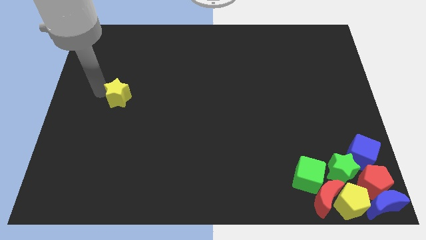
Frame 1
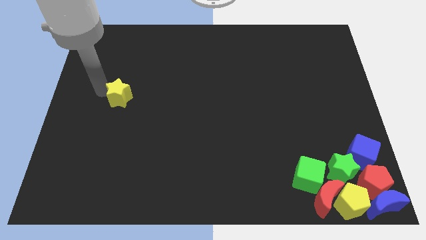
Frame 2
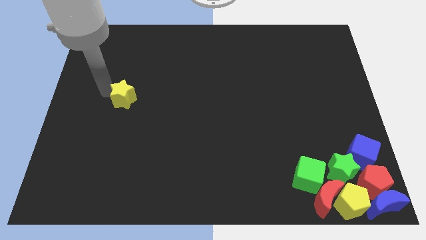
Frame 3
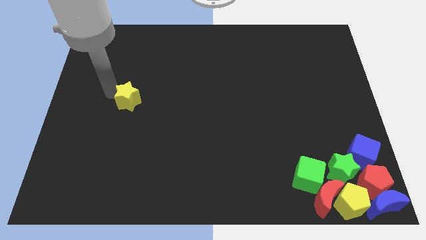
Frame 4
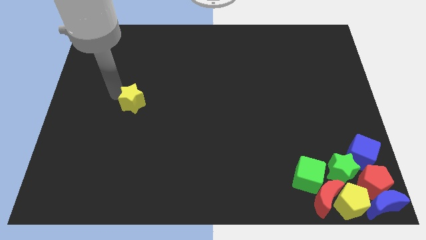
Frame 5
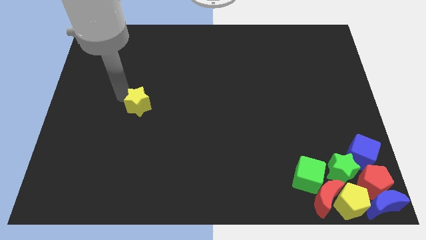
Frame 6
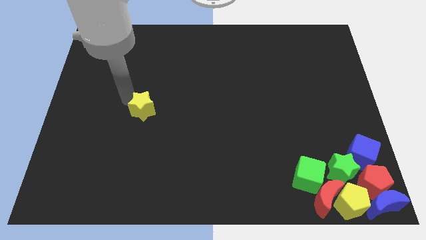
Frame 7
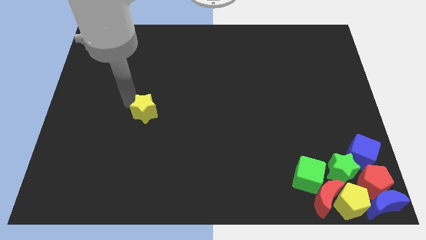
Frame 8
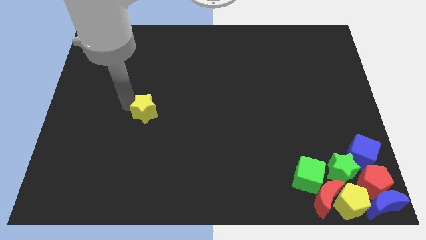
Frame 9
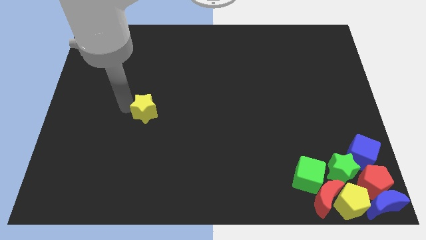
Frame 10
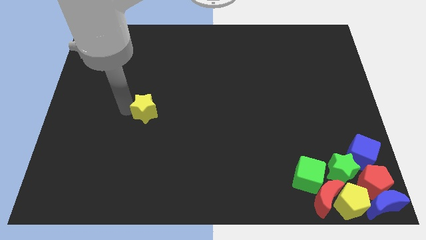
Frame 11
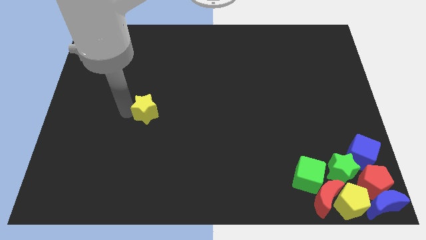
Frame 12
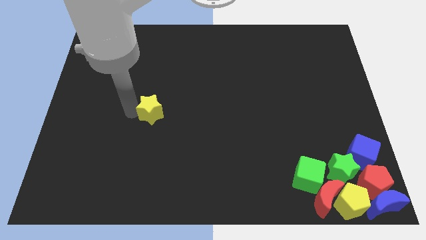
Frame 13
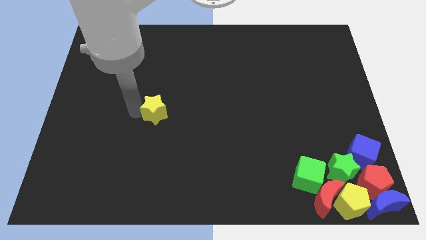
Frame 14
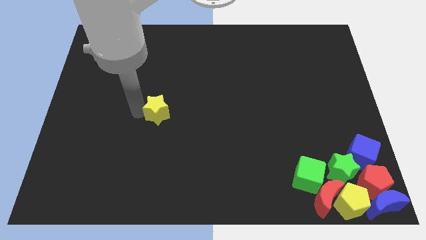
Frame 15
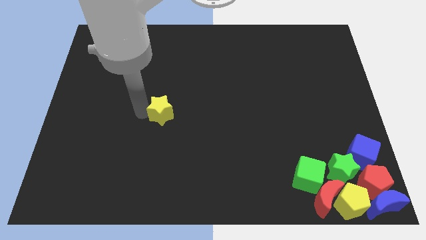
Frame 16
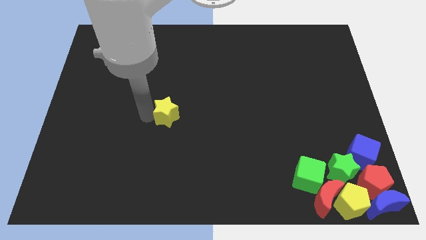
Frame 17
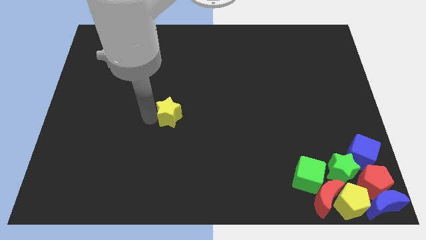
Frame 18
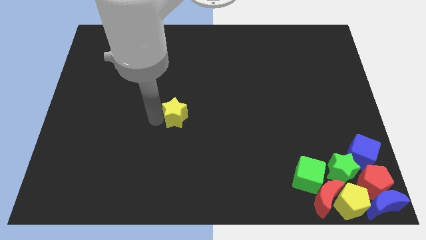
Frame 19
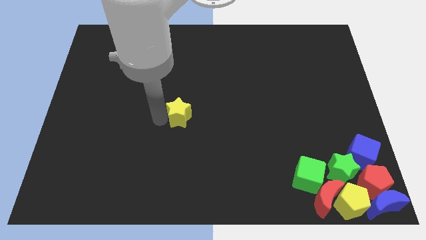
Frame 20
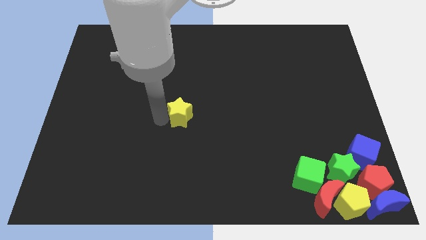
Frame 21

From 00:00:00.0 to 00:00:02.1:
push the yellow star towards the center of the board

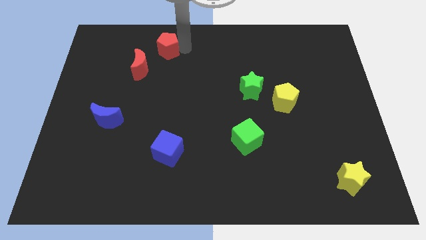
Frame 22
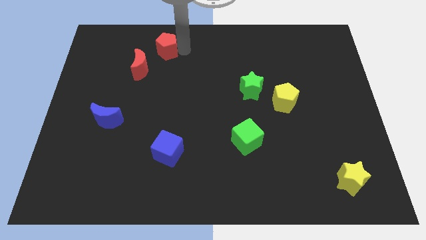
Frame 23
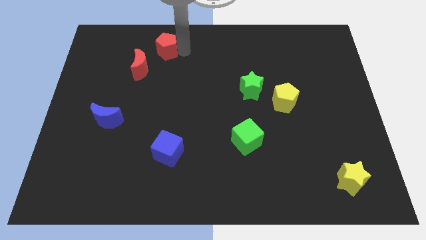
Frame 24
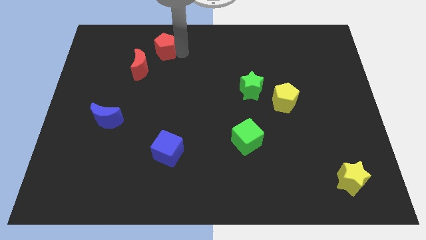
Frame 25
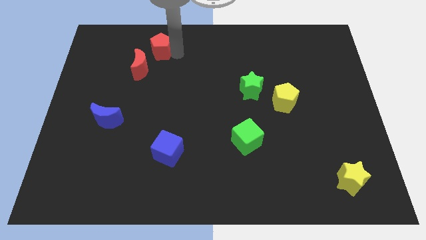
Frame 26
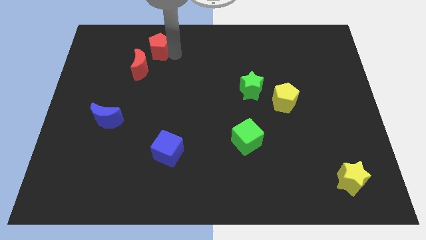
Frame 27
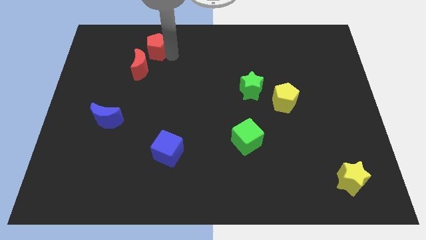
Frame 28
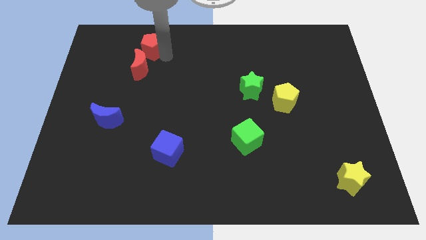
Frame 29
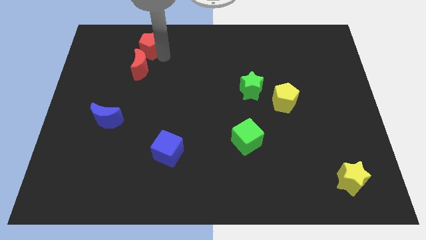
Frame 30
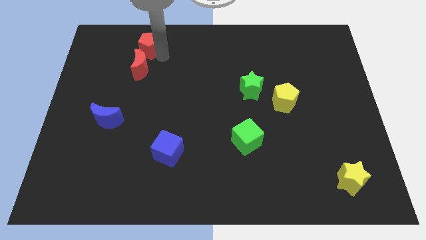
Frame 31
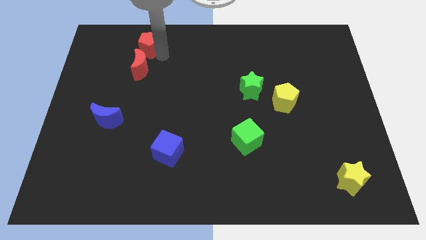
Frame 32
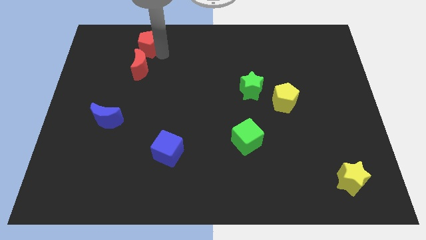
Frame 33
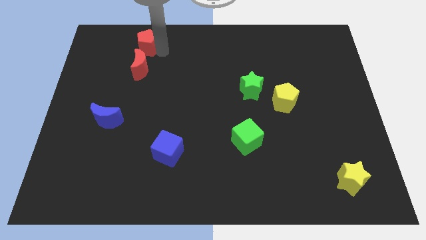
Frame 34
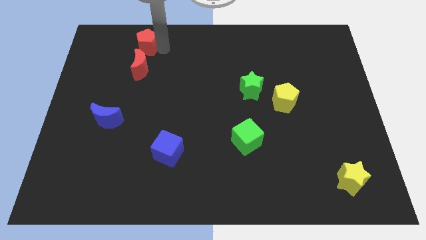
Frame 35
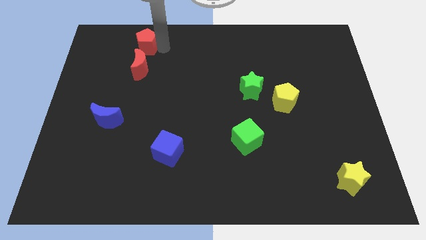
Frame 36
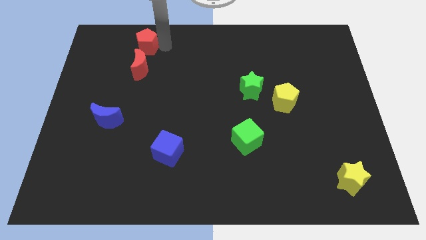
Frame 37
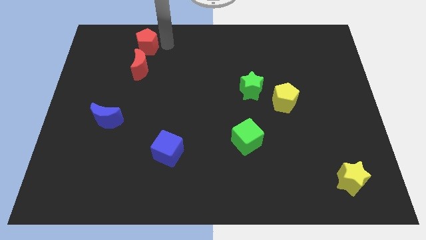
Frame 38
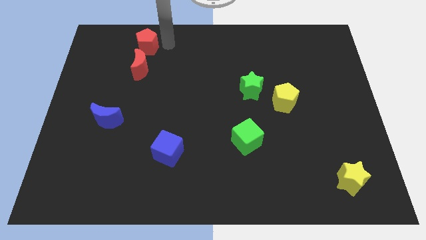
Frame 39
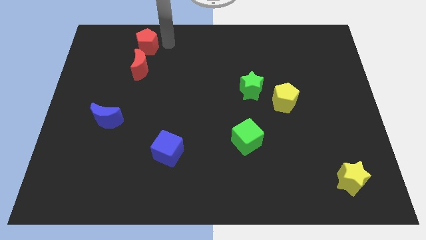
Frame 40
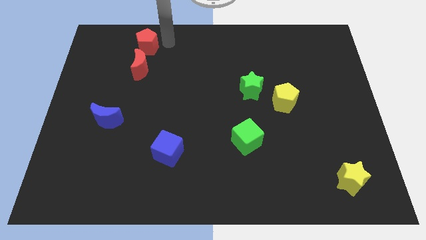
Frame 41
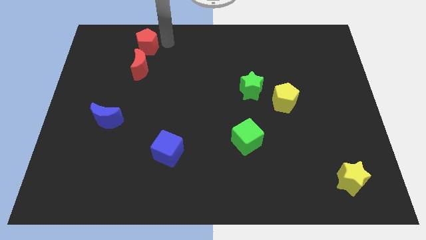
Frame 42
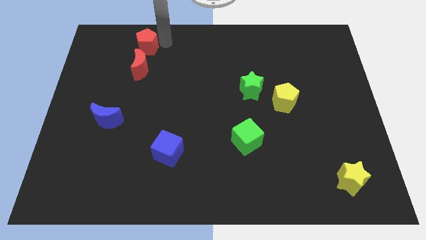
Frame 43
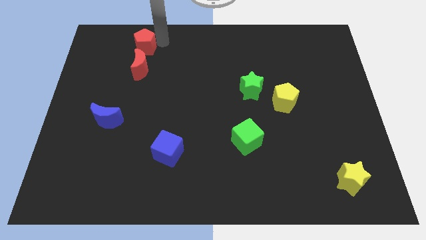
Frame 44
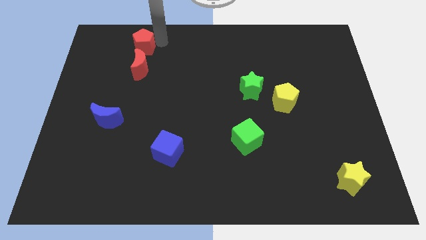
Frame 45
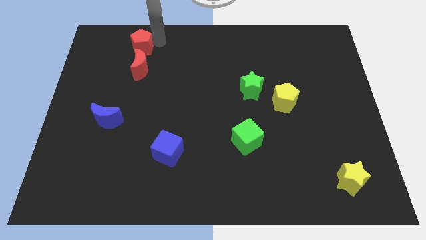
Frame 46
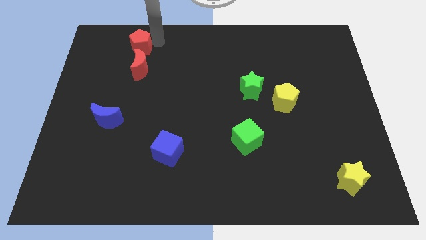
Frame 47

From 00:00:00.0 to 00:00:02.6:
place pentagon above red moon

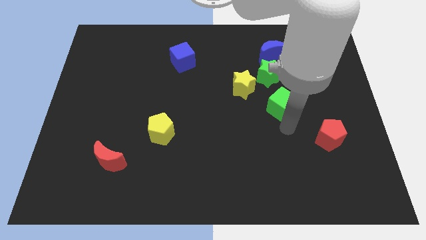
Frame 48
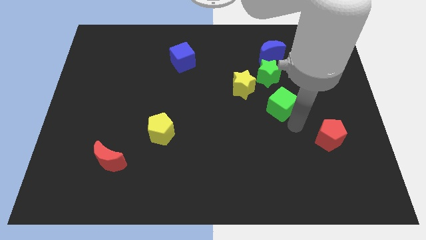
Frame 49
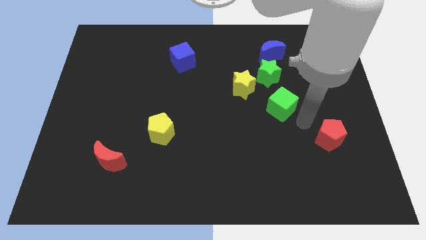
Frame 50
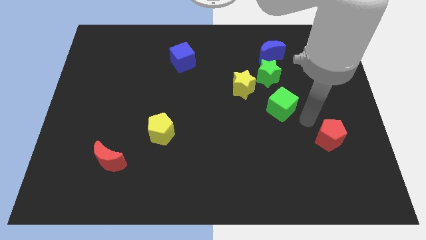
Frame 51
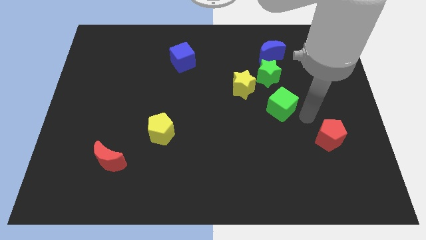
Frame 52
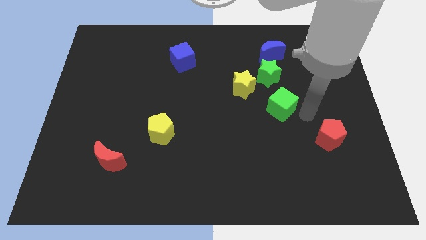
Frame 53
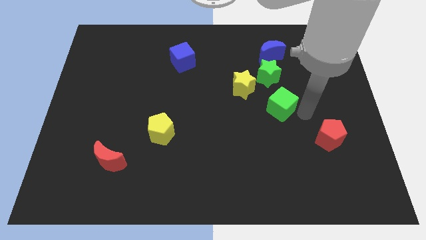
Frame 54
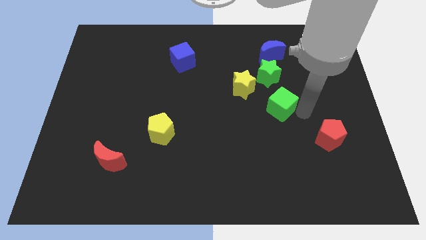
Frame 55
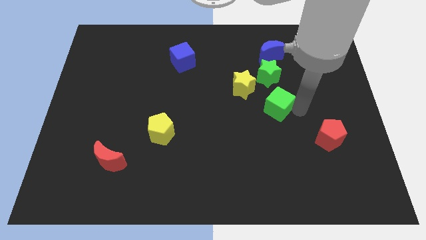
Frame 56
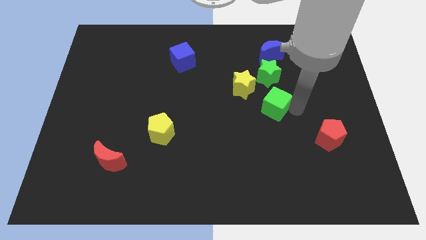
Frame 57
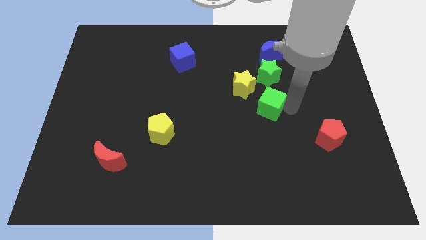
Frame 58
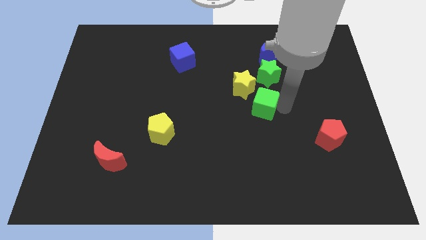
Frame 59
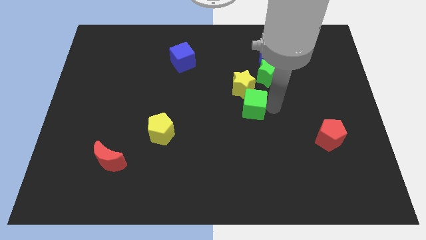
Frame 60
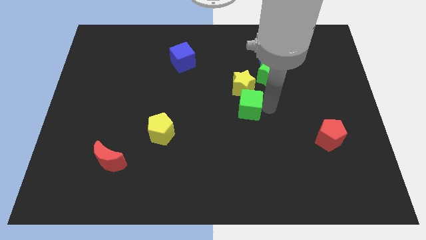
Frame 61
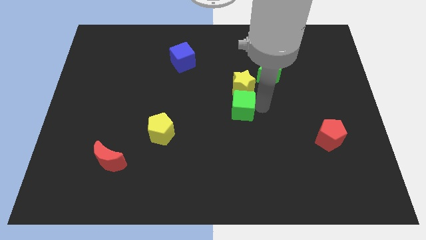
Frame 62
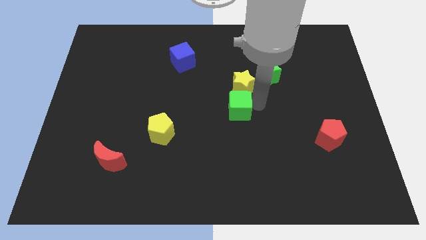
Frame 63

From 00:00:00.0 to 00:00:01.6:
place green cube to the bottom of yellow star

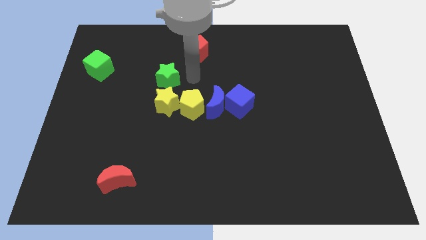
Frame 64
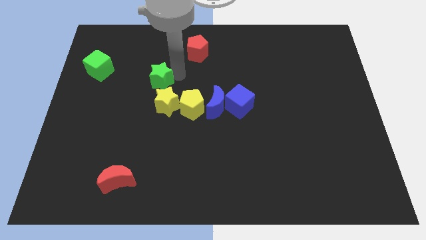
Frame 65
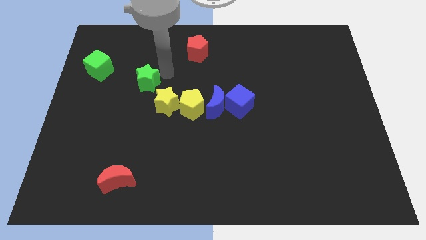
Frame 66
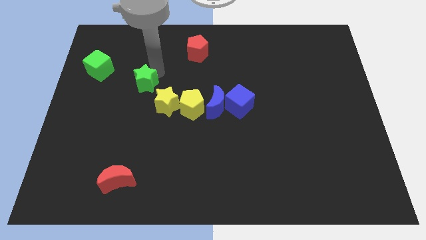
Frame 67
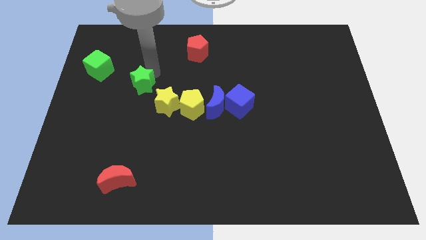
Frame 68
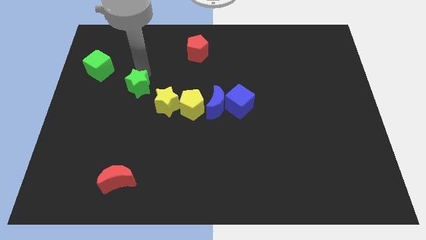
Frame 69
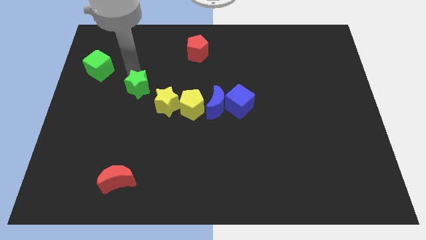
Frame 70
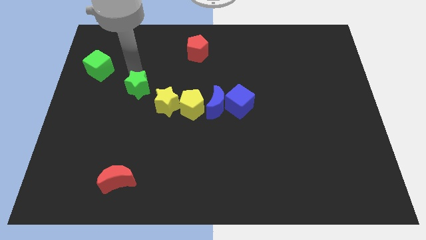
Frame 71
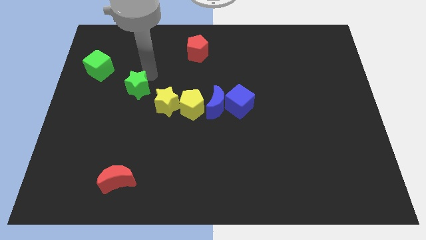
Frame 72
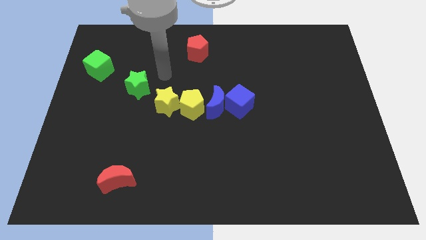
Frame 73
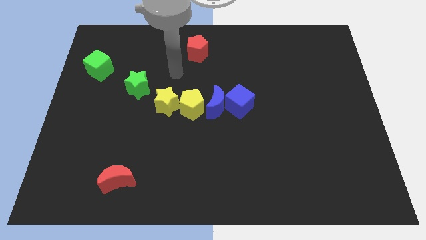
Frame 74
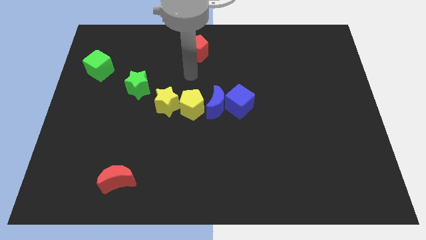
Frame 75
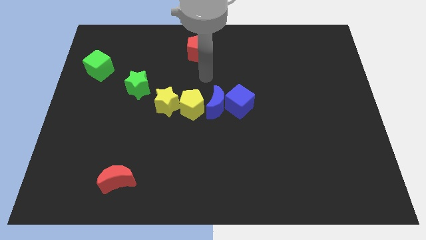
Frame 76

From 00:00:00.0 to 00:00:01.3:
push the green star to the top left of the yellow star

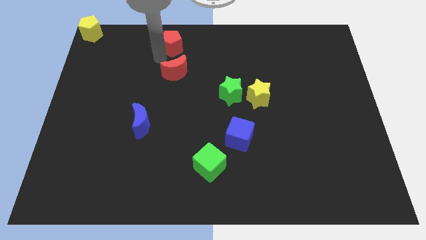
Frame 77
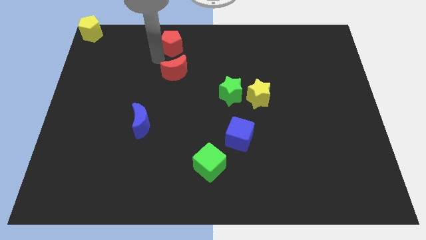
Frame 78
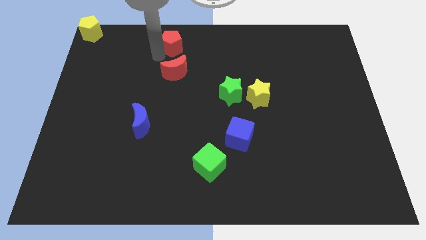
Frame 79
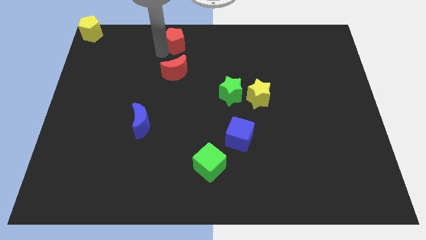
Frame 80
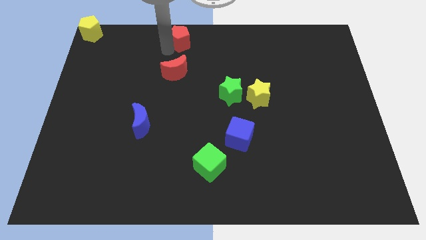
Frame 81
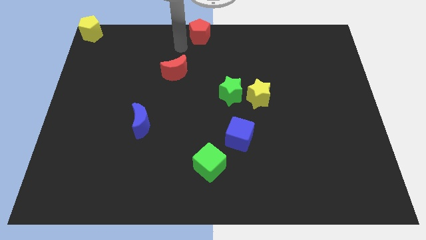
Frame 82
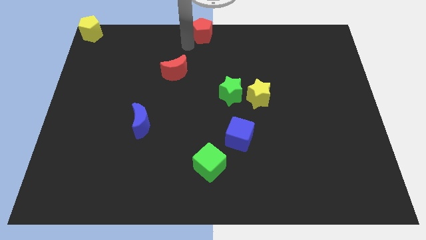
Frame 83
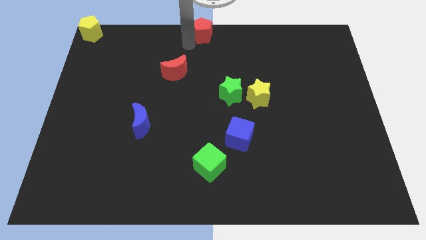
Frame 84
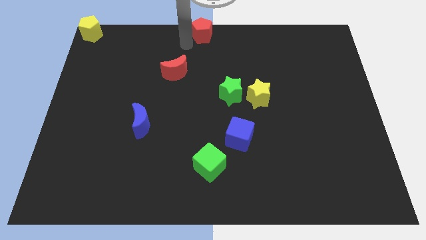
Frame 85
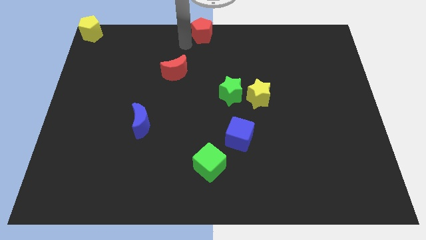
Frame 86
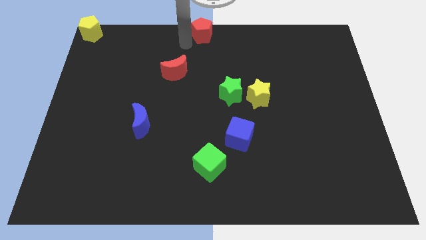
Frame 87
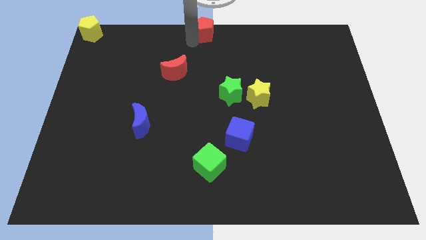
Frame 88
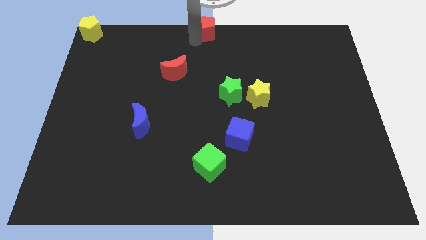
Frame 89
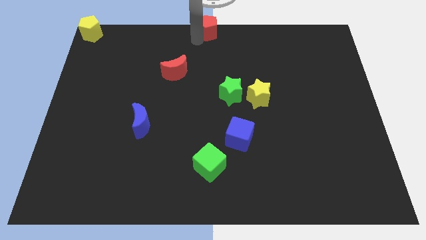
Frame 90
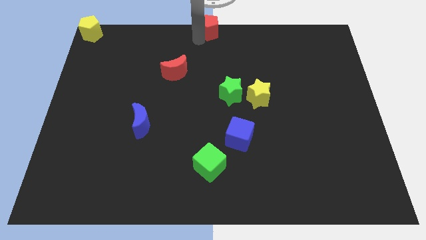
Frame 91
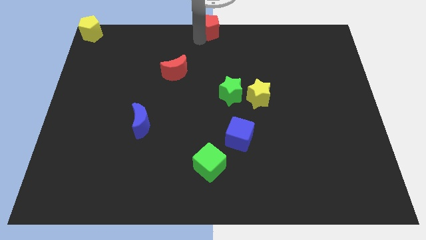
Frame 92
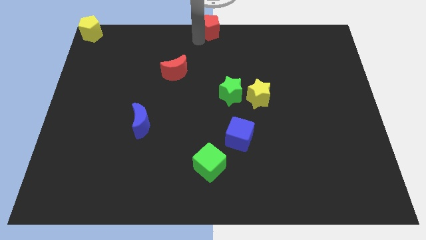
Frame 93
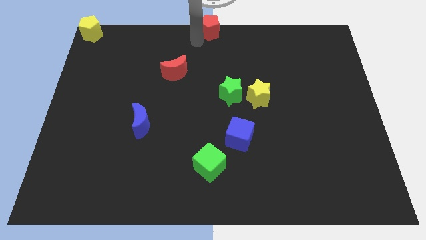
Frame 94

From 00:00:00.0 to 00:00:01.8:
move the red pentagon diagonally top right to the red moon
